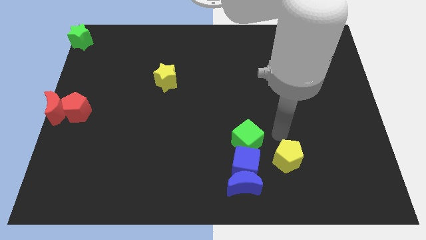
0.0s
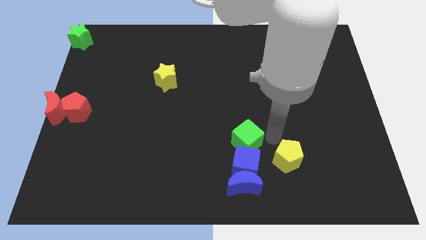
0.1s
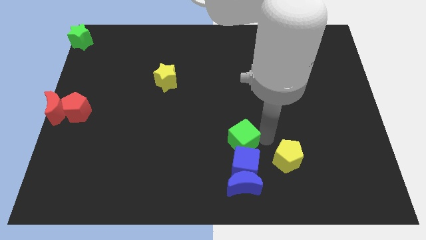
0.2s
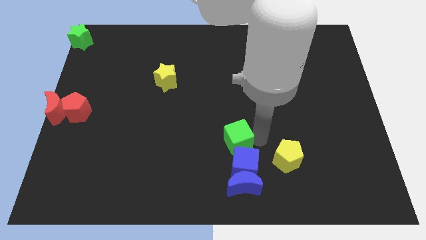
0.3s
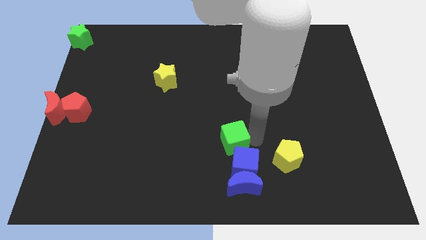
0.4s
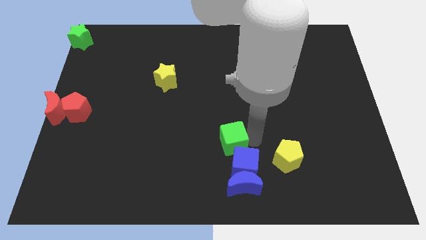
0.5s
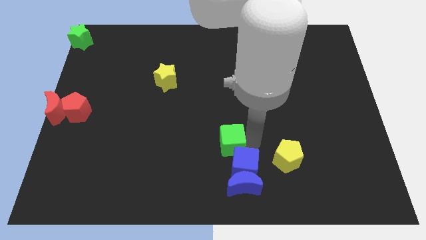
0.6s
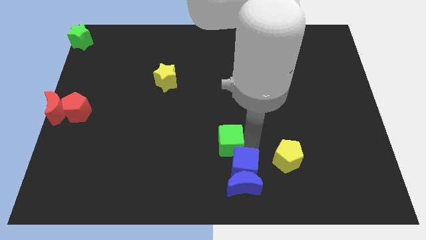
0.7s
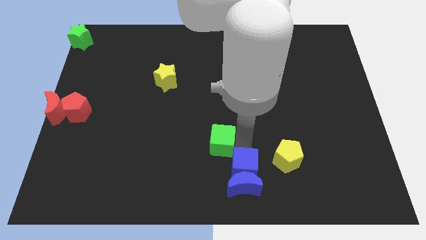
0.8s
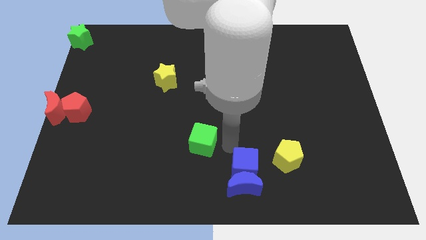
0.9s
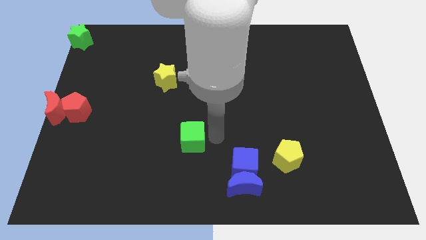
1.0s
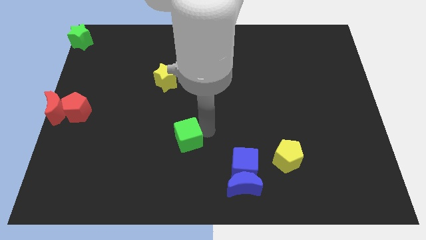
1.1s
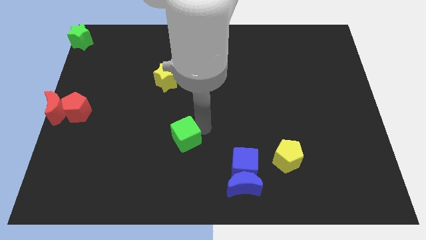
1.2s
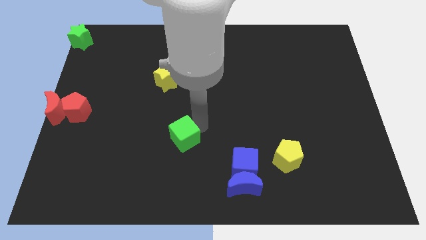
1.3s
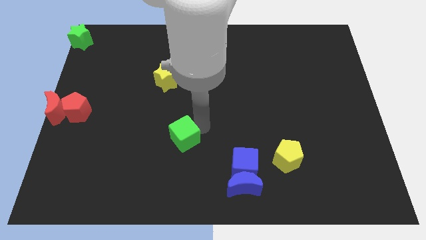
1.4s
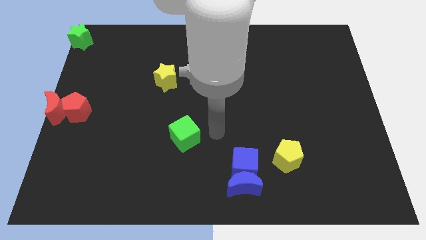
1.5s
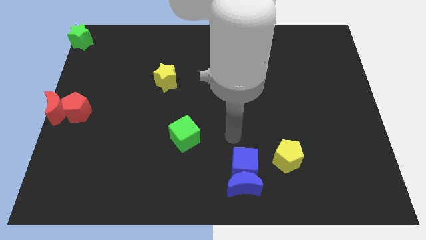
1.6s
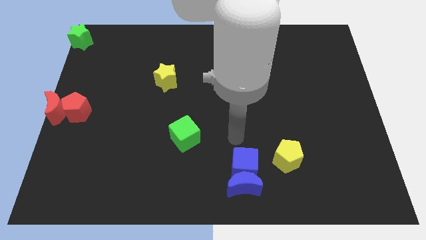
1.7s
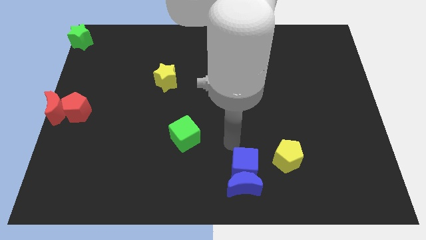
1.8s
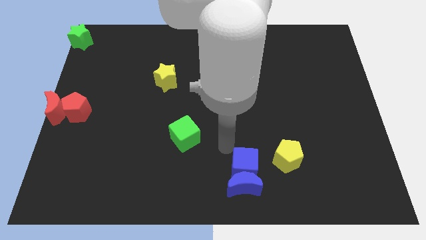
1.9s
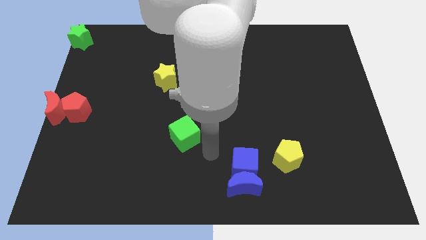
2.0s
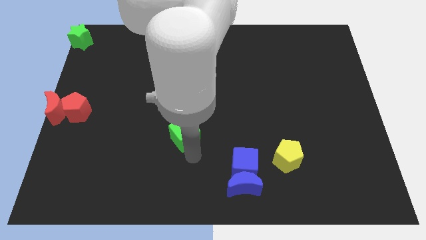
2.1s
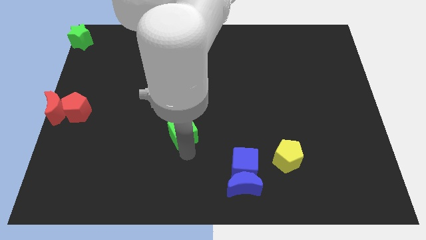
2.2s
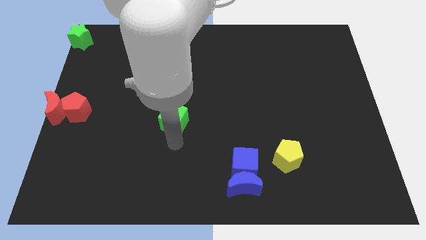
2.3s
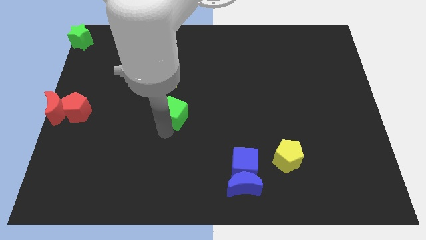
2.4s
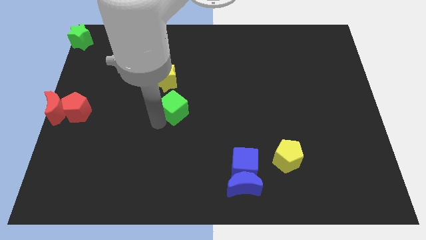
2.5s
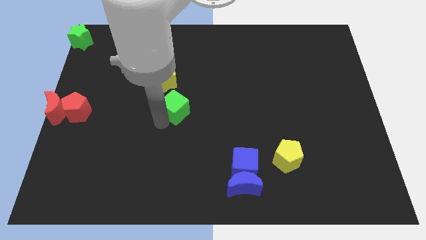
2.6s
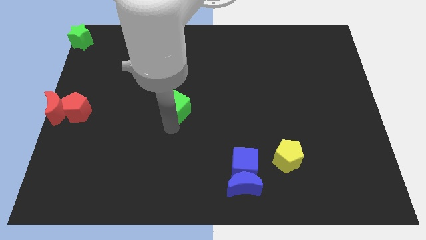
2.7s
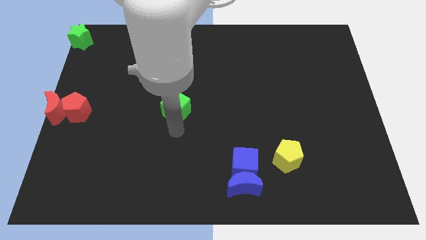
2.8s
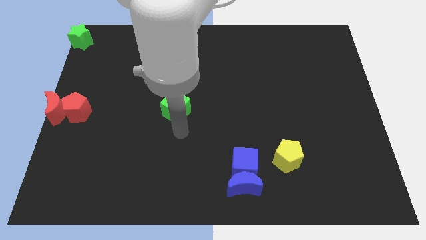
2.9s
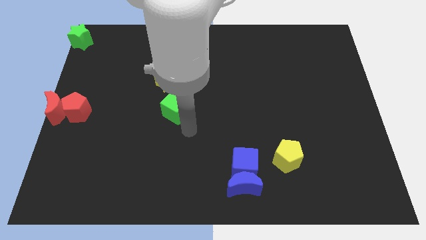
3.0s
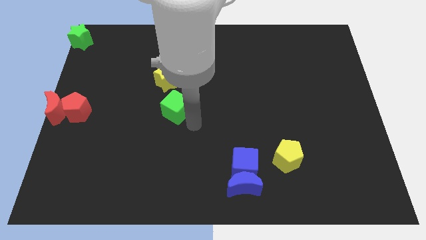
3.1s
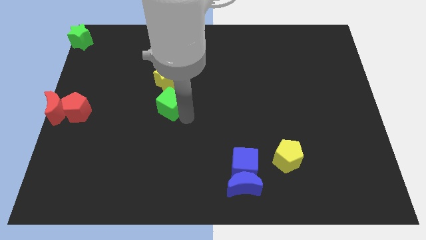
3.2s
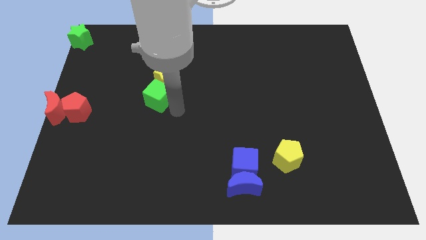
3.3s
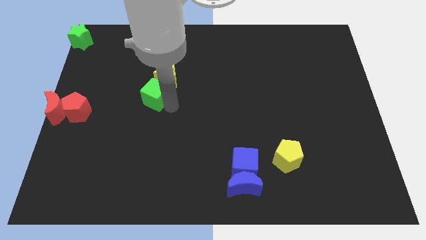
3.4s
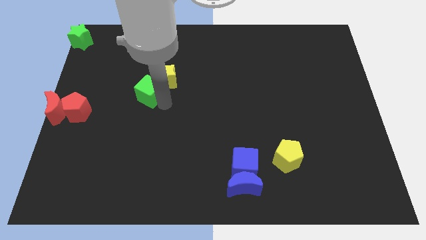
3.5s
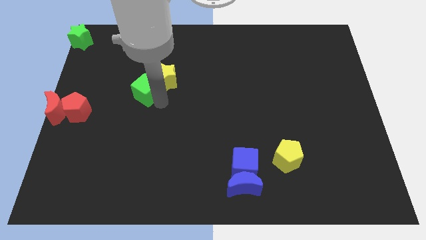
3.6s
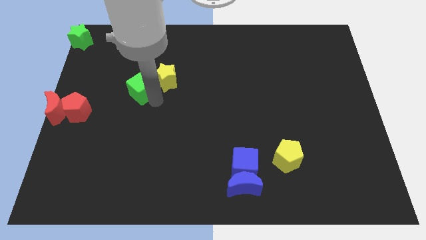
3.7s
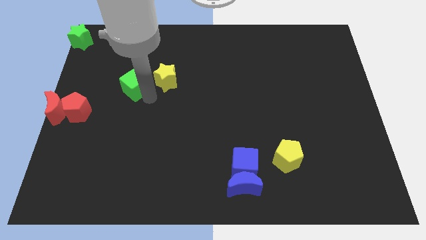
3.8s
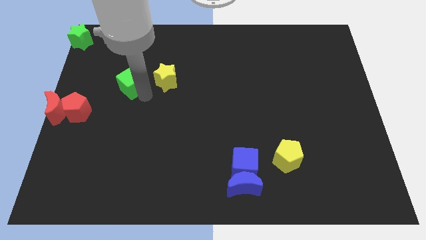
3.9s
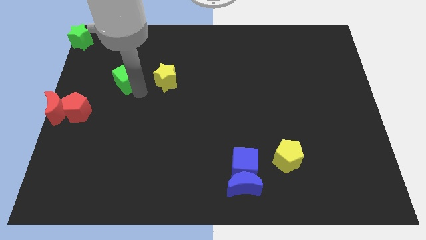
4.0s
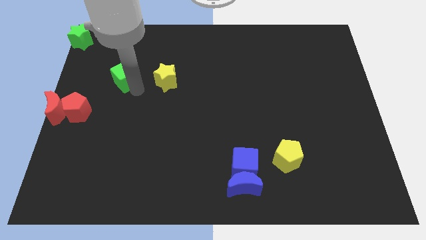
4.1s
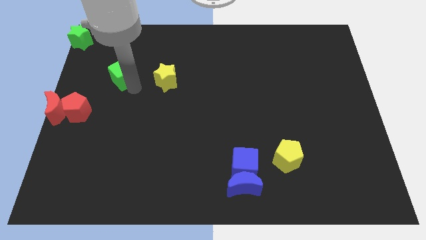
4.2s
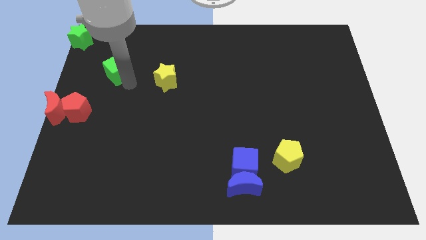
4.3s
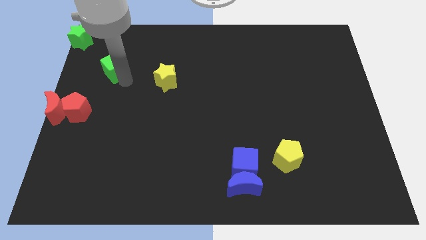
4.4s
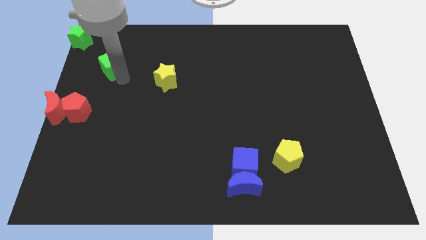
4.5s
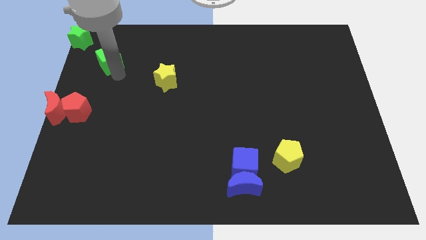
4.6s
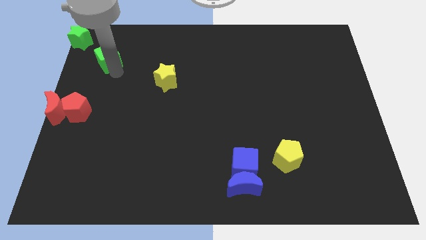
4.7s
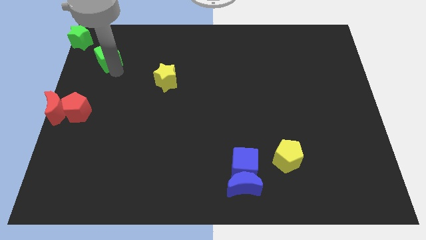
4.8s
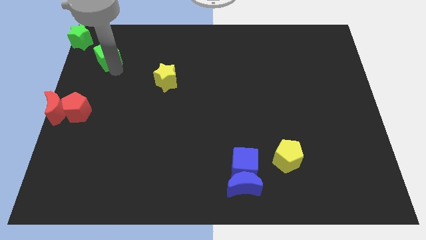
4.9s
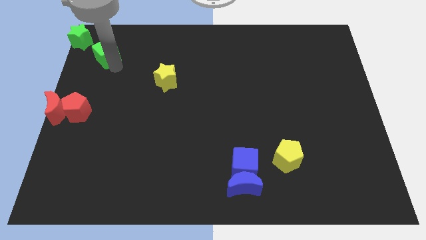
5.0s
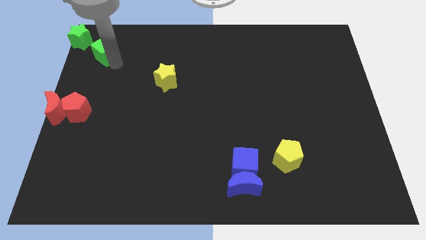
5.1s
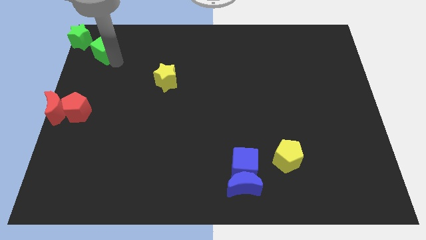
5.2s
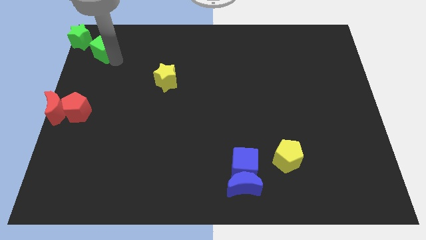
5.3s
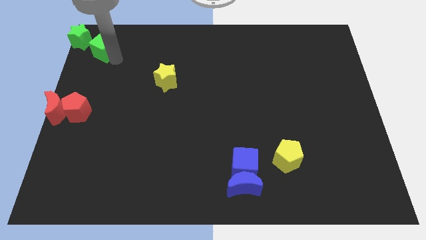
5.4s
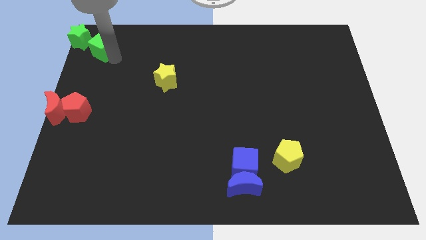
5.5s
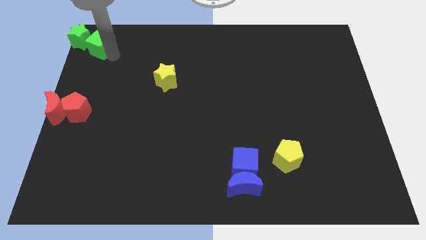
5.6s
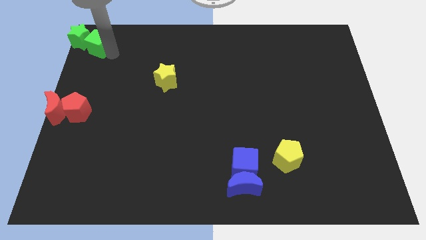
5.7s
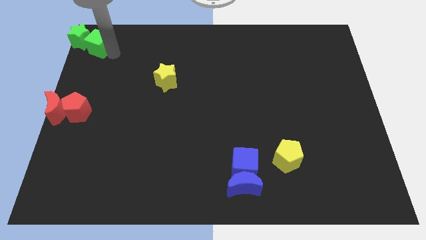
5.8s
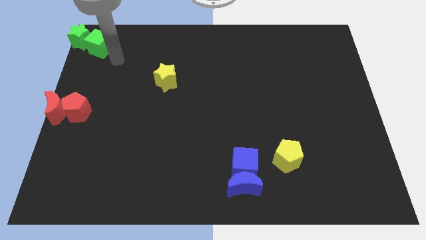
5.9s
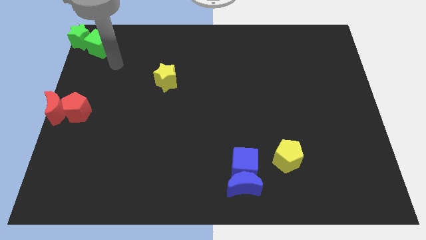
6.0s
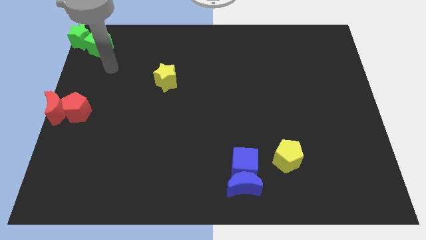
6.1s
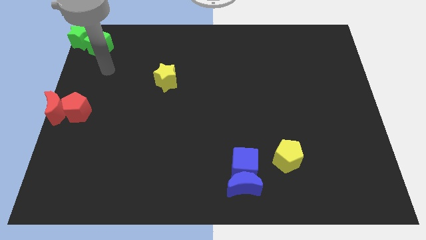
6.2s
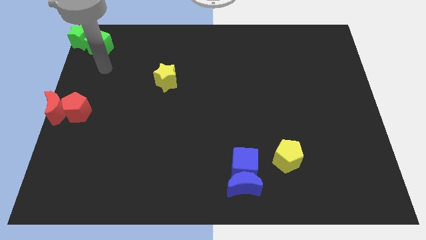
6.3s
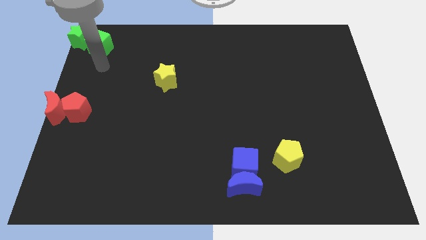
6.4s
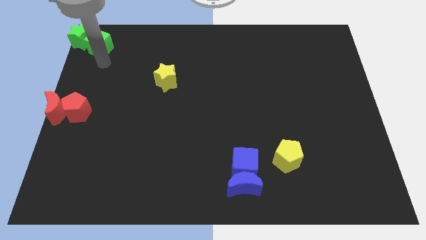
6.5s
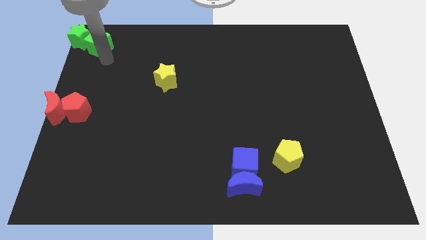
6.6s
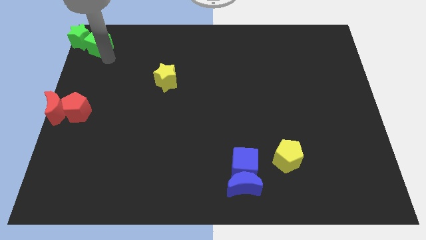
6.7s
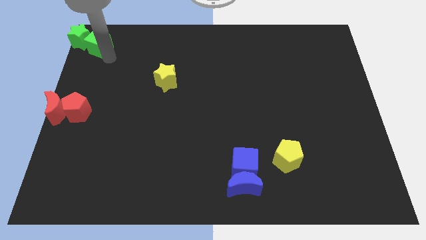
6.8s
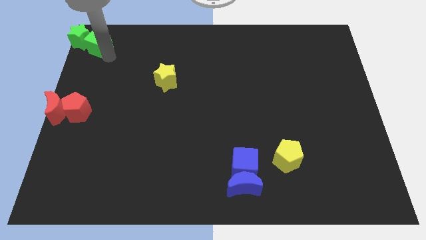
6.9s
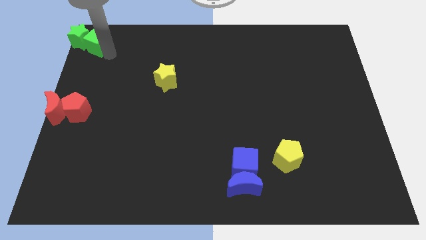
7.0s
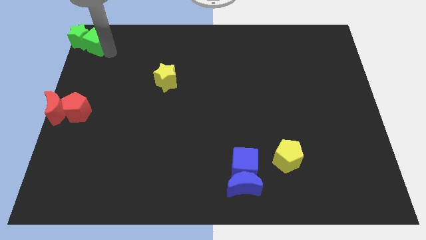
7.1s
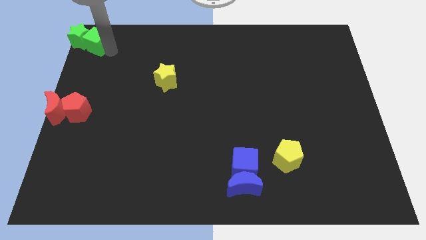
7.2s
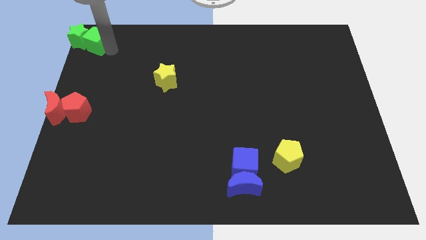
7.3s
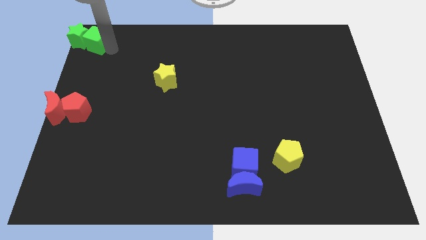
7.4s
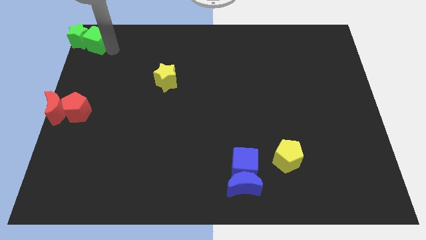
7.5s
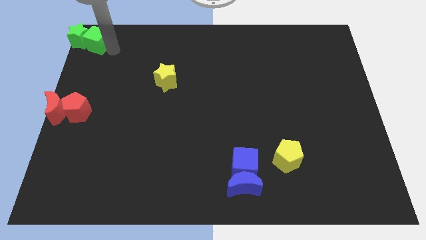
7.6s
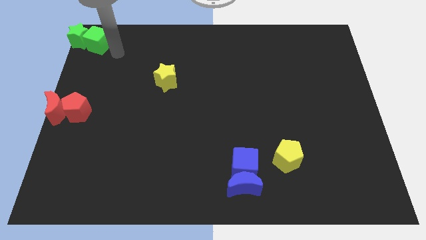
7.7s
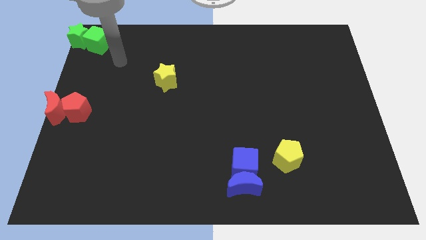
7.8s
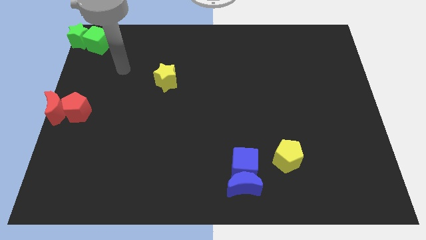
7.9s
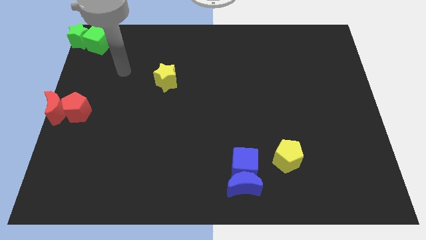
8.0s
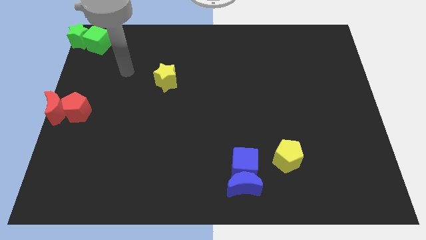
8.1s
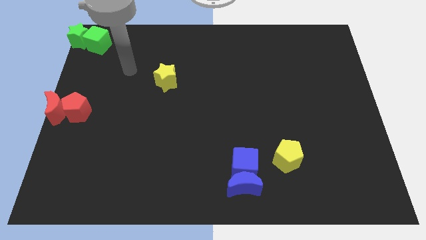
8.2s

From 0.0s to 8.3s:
push the green cube to the right side of the green star

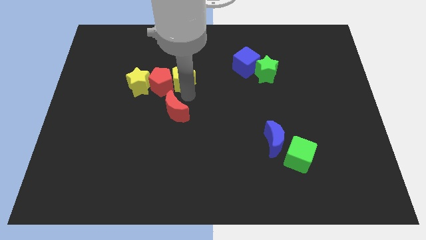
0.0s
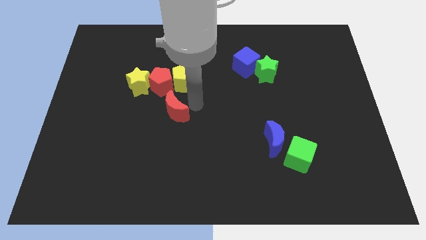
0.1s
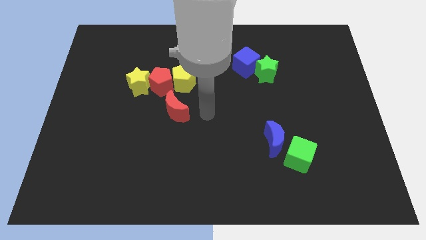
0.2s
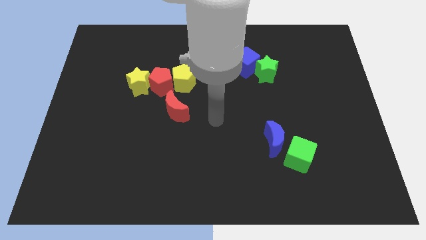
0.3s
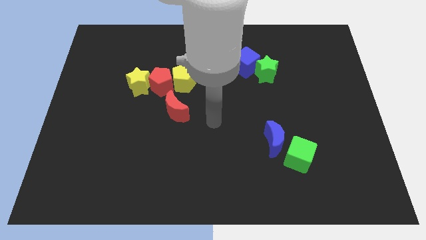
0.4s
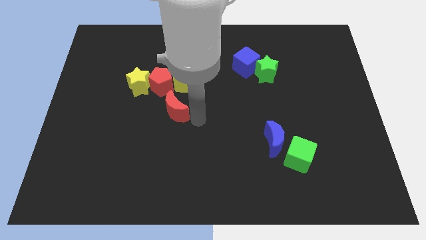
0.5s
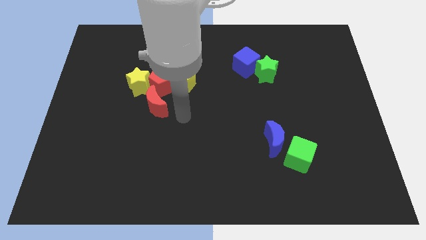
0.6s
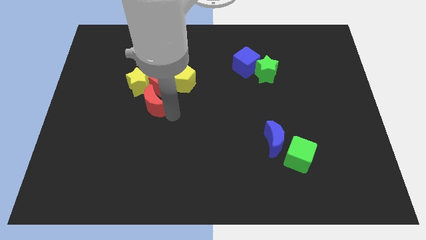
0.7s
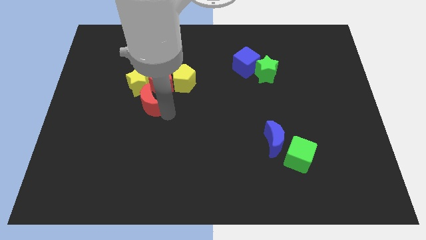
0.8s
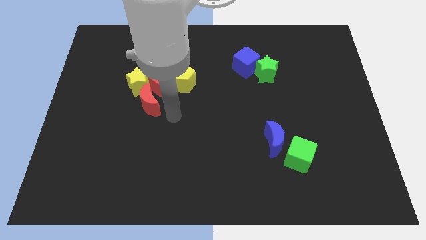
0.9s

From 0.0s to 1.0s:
move the red crescent to the bottom of the yellow star
